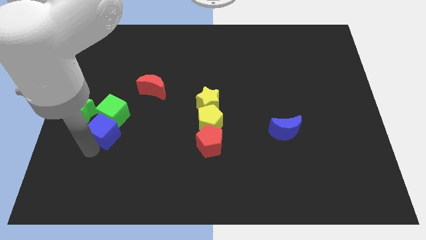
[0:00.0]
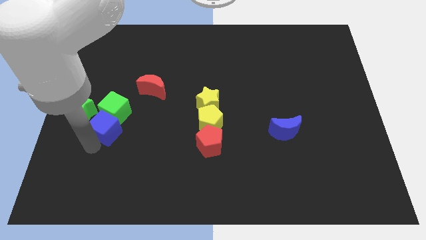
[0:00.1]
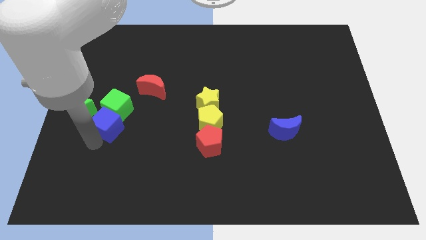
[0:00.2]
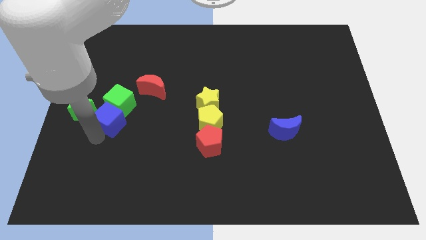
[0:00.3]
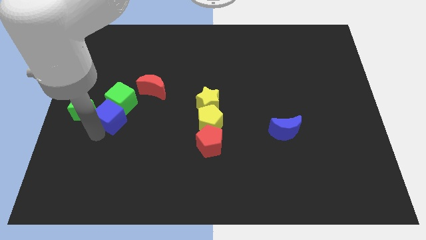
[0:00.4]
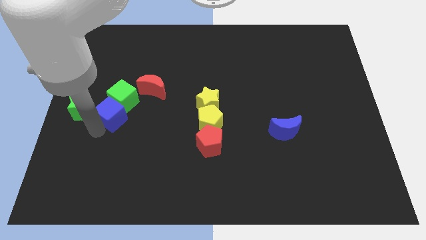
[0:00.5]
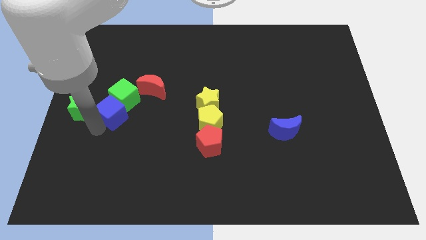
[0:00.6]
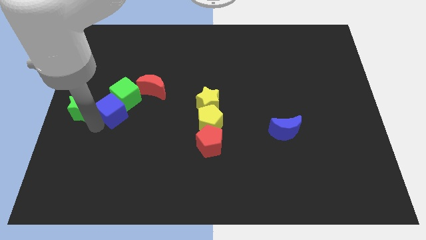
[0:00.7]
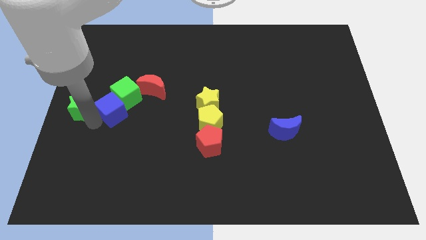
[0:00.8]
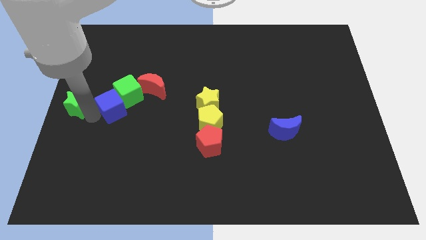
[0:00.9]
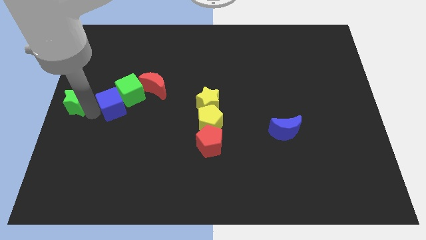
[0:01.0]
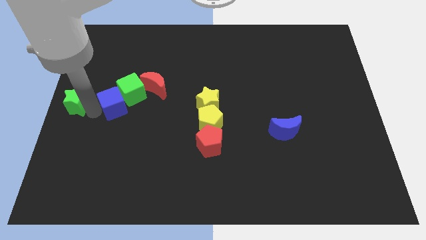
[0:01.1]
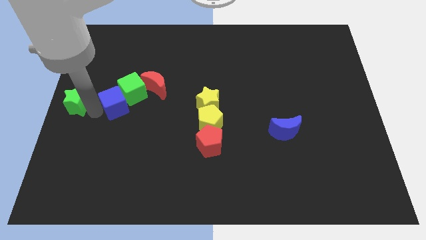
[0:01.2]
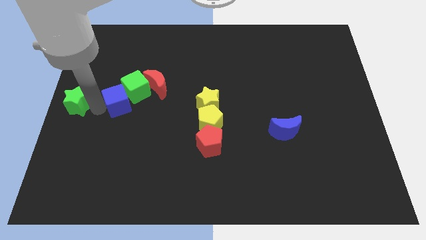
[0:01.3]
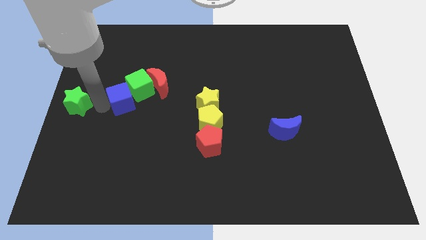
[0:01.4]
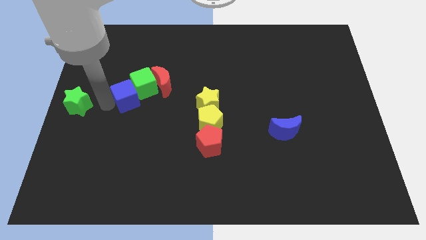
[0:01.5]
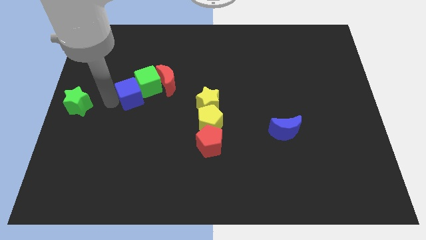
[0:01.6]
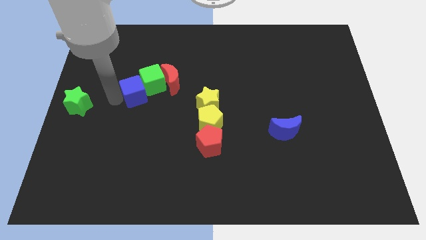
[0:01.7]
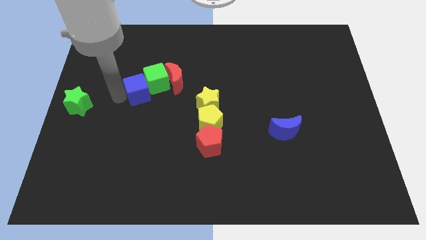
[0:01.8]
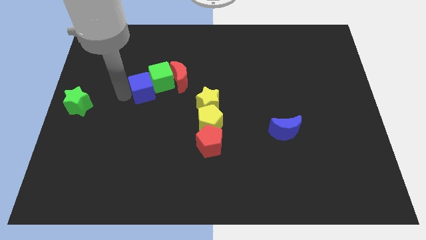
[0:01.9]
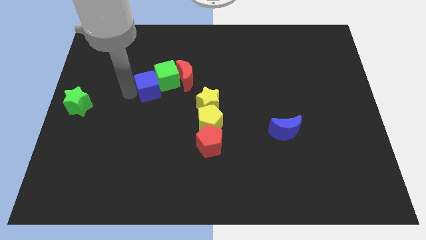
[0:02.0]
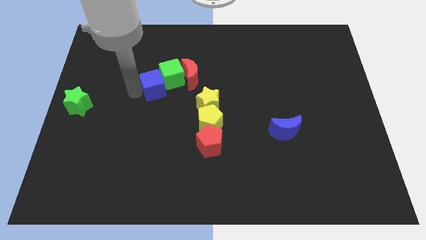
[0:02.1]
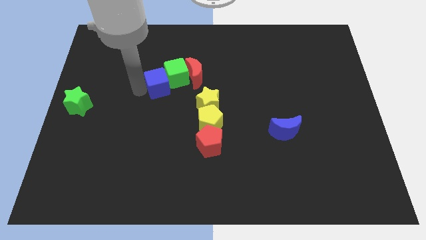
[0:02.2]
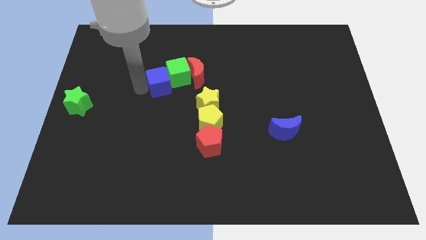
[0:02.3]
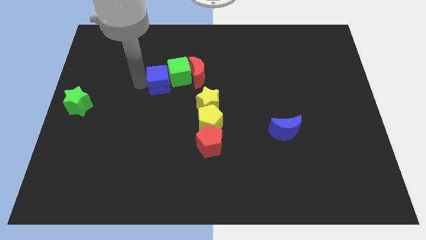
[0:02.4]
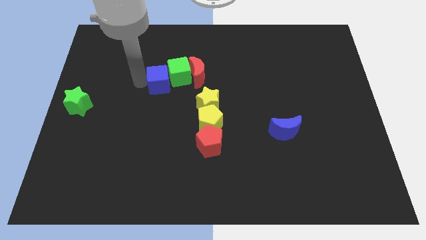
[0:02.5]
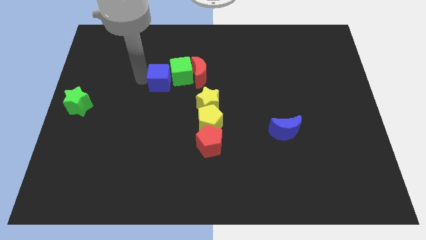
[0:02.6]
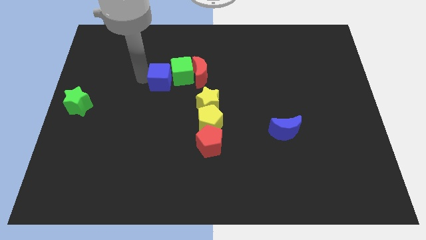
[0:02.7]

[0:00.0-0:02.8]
drag blue cube along with green cube towards red moon

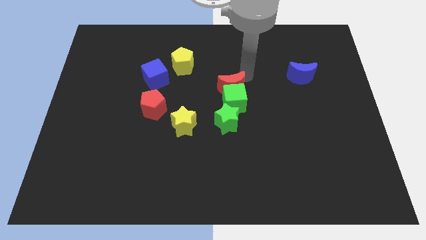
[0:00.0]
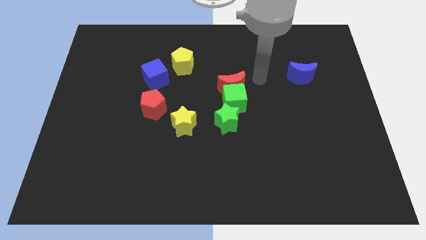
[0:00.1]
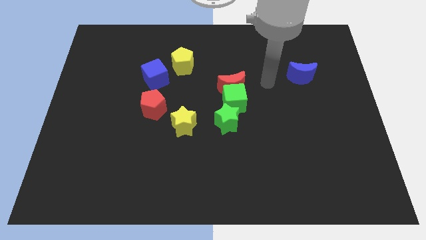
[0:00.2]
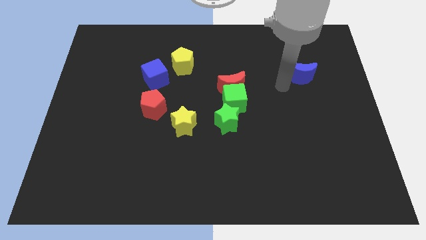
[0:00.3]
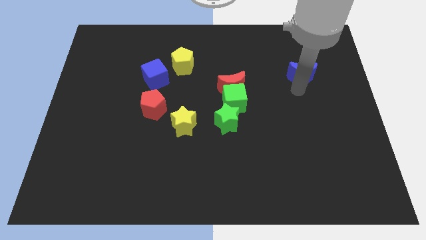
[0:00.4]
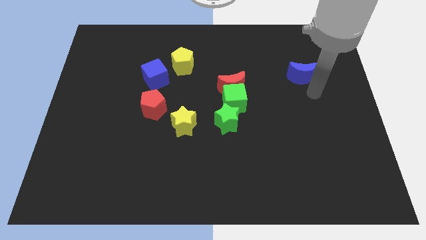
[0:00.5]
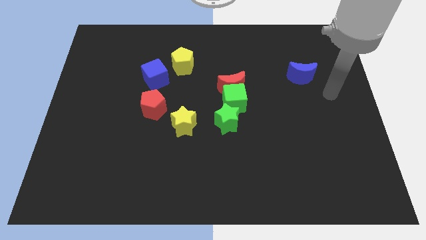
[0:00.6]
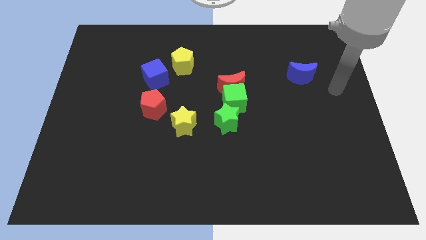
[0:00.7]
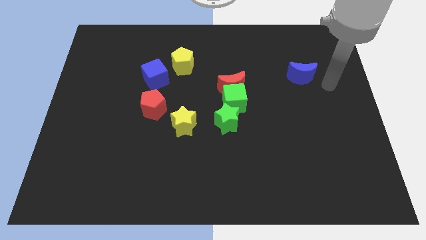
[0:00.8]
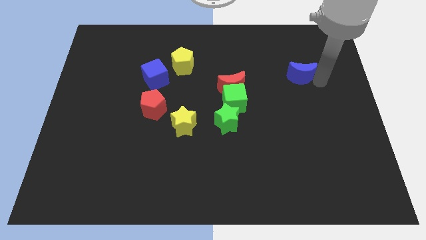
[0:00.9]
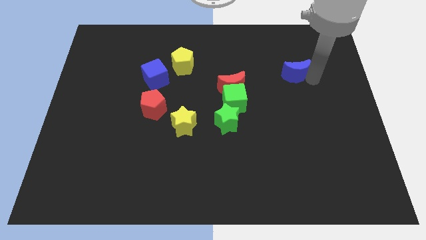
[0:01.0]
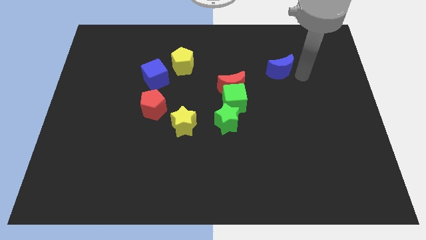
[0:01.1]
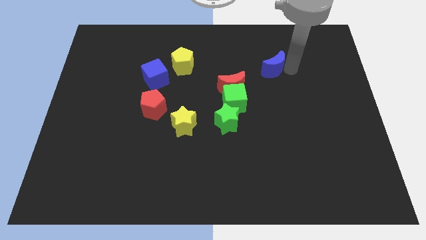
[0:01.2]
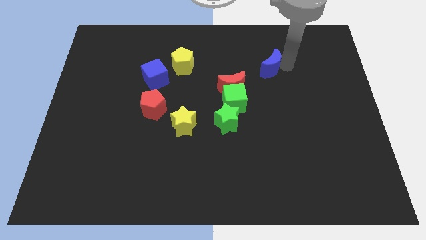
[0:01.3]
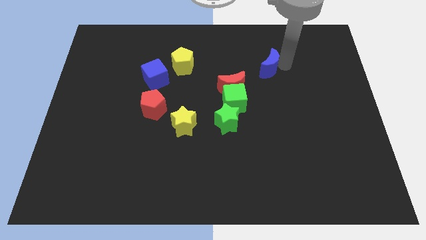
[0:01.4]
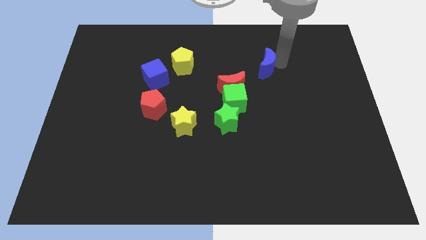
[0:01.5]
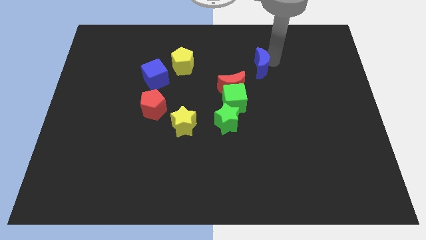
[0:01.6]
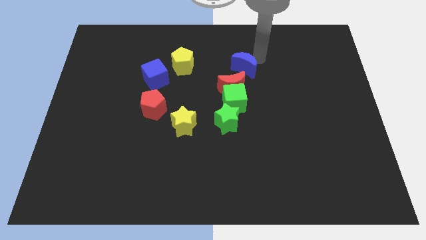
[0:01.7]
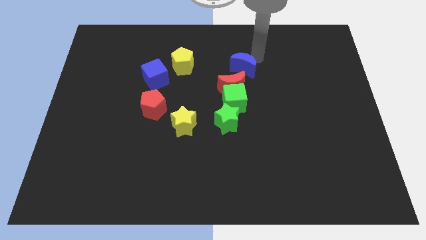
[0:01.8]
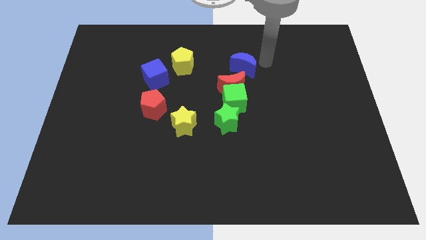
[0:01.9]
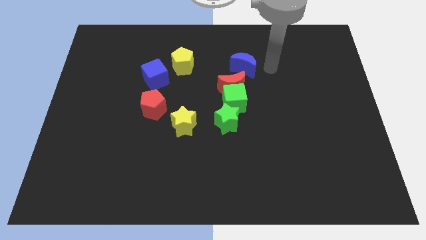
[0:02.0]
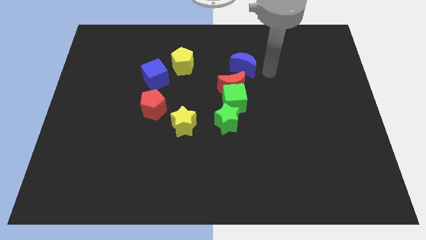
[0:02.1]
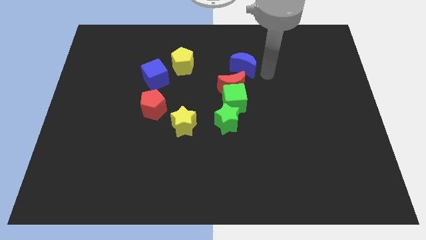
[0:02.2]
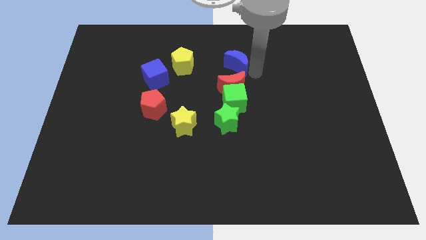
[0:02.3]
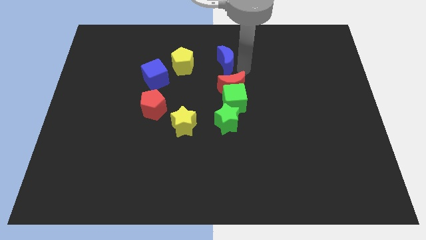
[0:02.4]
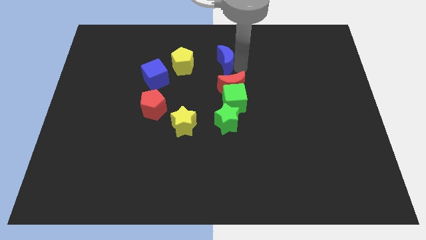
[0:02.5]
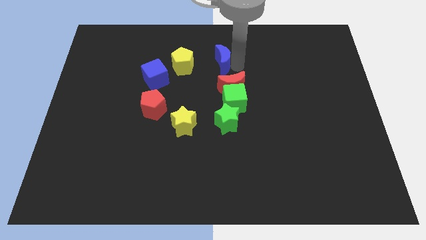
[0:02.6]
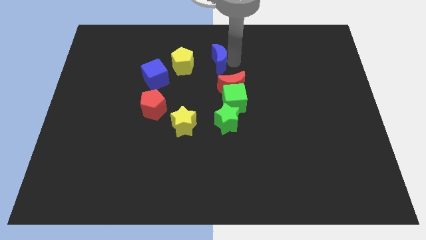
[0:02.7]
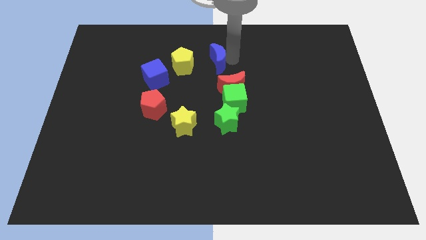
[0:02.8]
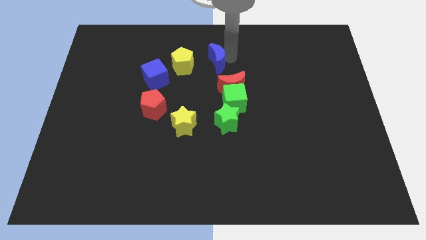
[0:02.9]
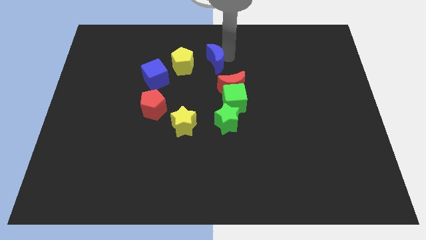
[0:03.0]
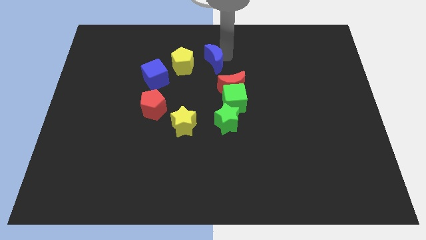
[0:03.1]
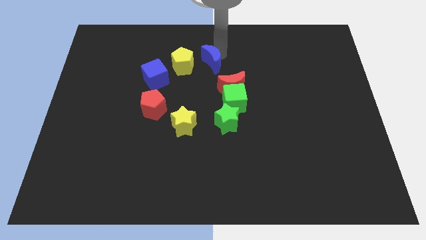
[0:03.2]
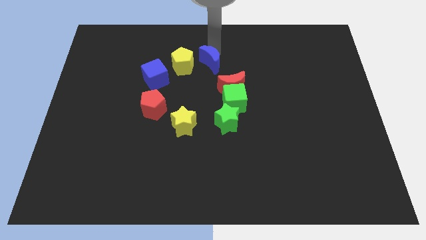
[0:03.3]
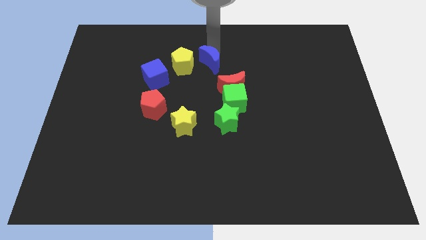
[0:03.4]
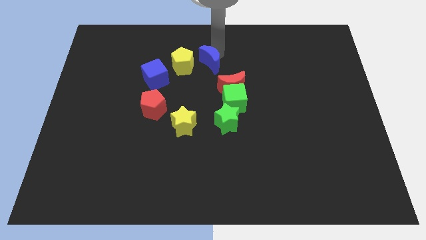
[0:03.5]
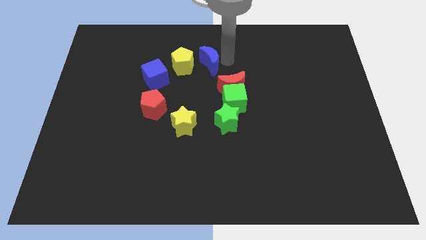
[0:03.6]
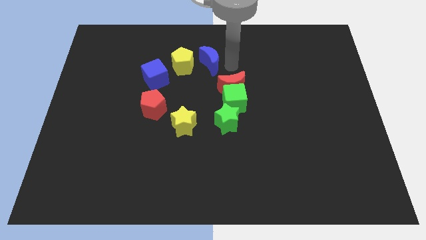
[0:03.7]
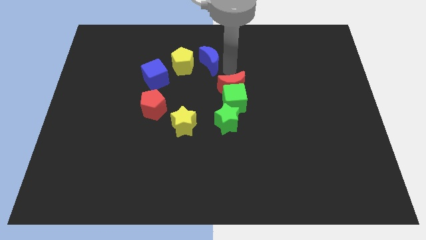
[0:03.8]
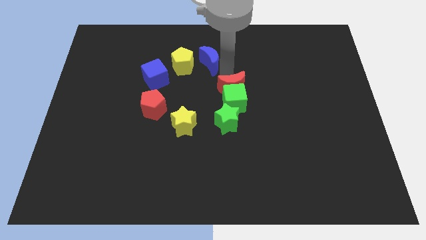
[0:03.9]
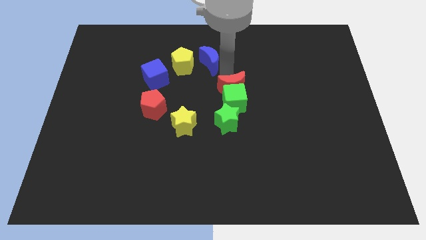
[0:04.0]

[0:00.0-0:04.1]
put the blue crescent right to the yellow pentagon

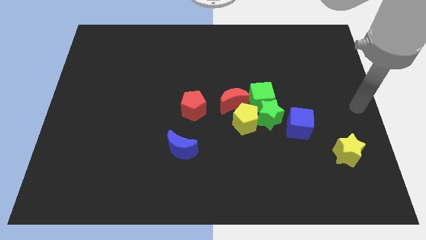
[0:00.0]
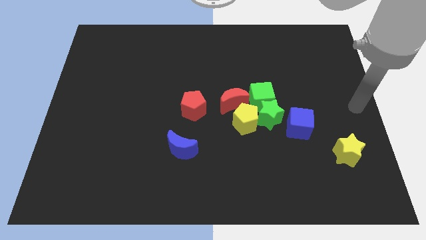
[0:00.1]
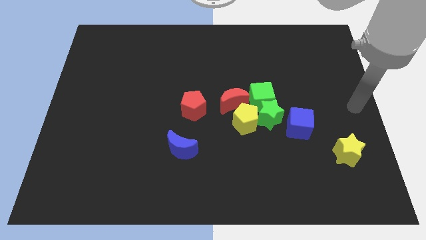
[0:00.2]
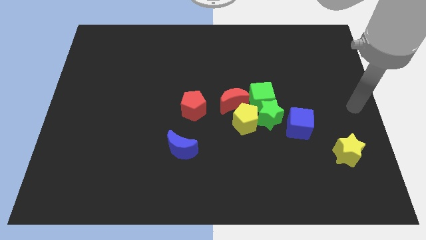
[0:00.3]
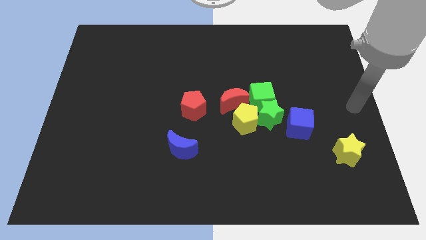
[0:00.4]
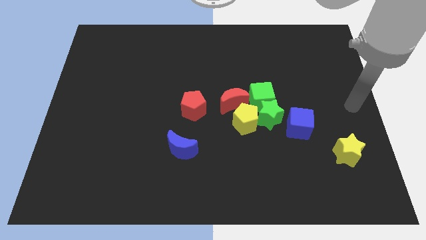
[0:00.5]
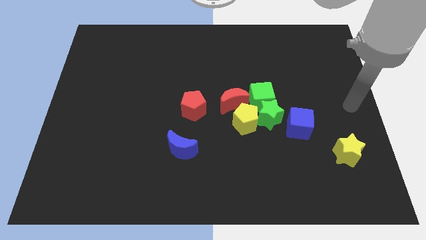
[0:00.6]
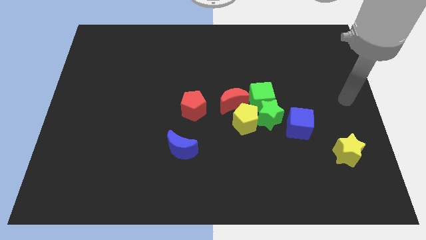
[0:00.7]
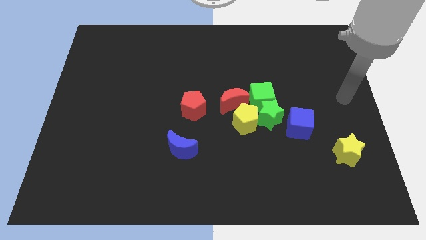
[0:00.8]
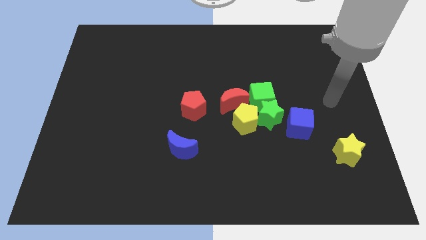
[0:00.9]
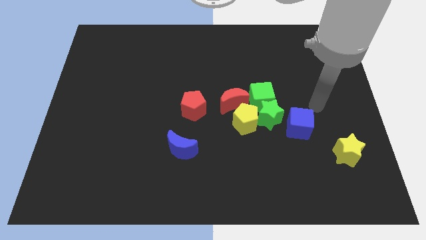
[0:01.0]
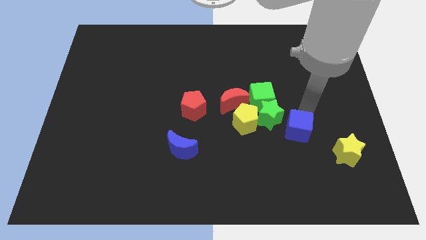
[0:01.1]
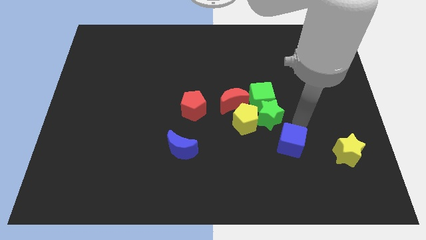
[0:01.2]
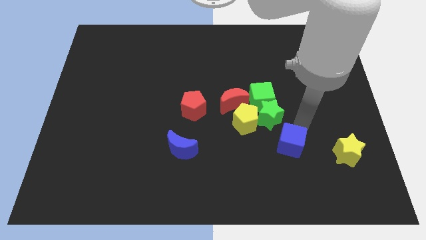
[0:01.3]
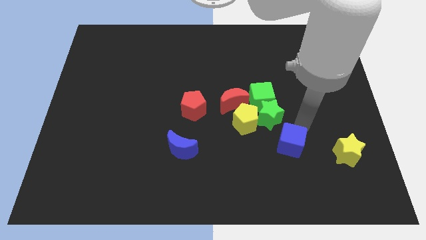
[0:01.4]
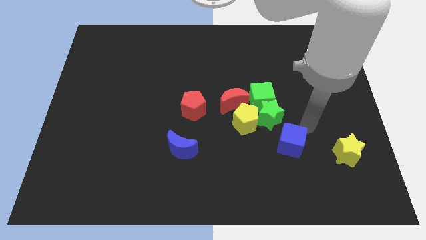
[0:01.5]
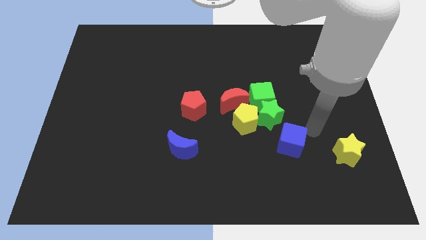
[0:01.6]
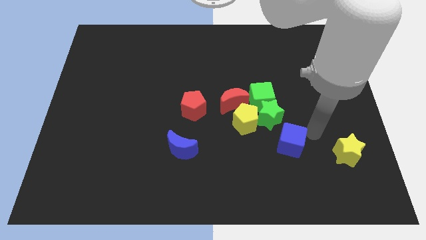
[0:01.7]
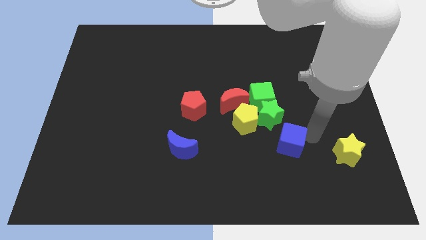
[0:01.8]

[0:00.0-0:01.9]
move blue cube downwards

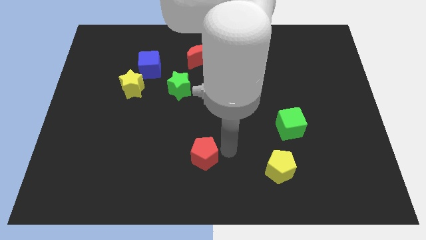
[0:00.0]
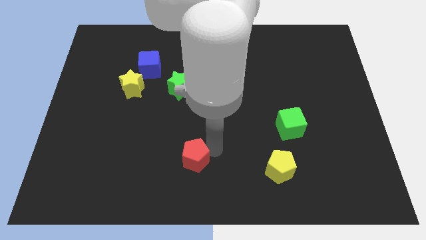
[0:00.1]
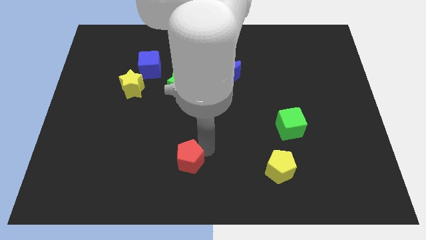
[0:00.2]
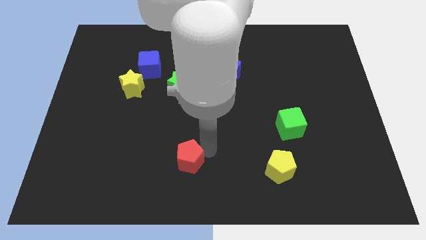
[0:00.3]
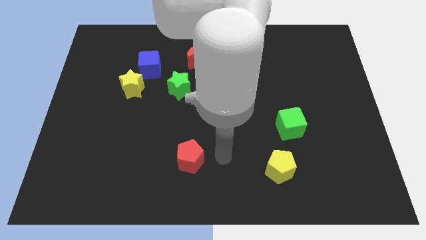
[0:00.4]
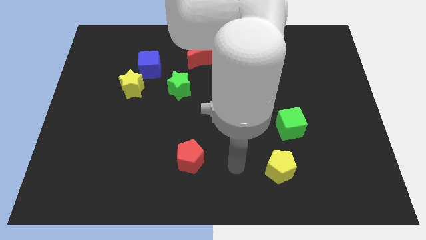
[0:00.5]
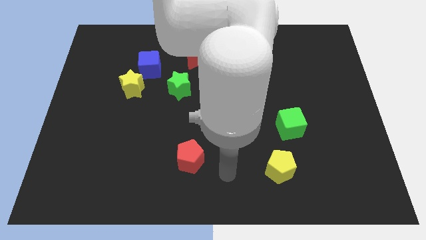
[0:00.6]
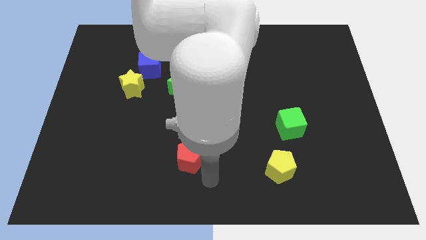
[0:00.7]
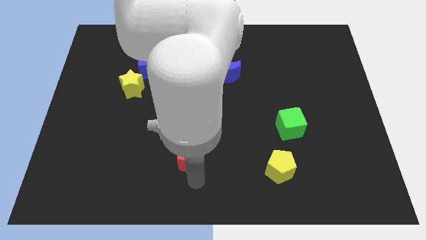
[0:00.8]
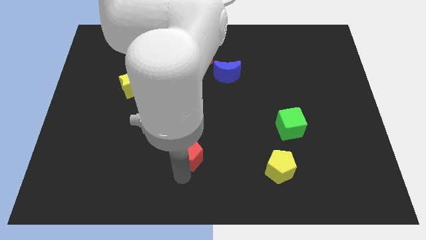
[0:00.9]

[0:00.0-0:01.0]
place the arm down to the red pentagon
